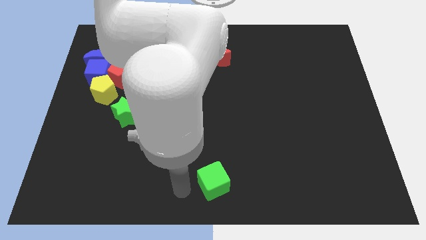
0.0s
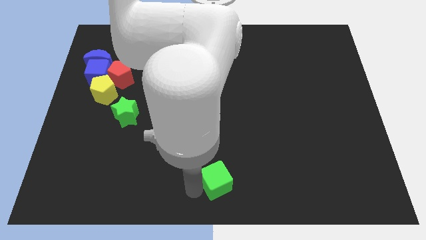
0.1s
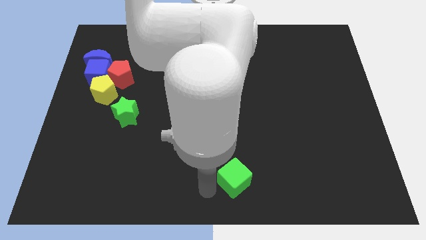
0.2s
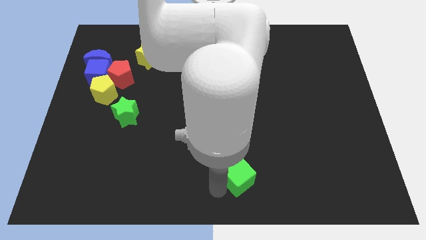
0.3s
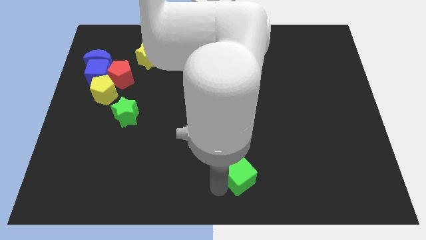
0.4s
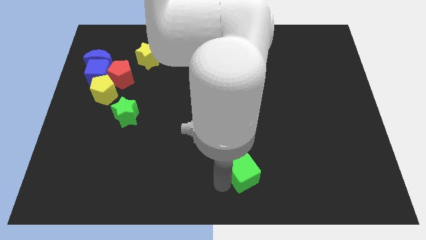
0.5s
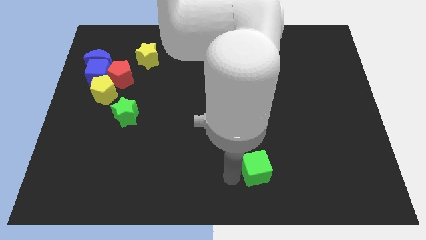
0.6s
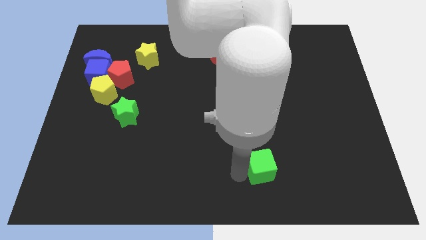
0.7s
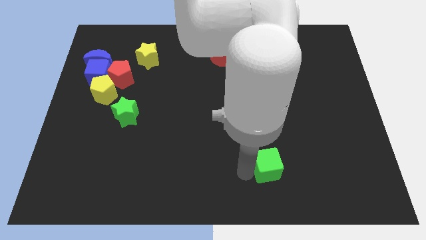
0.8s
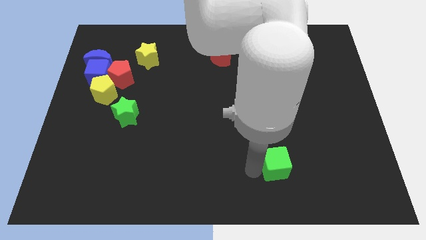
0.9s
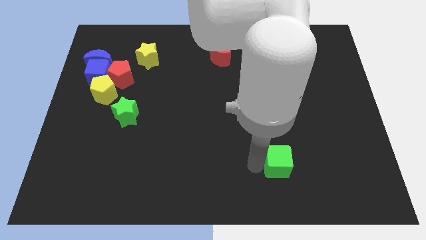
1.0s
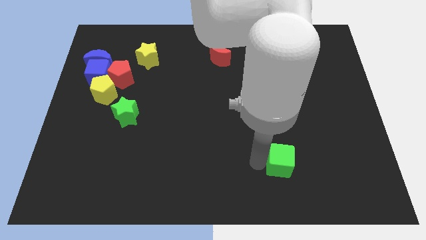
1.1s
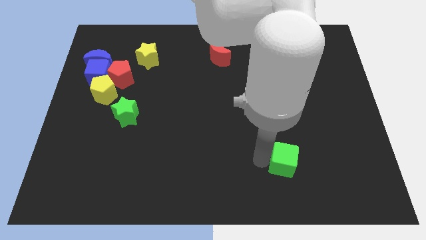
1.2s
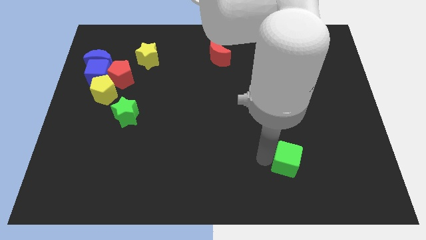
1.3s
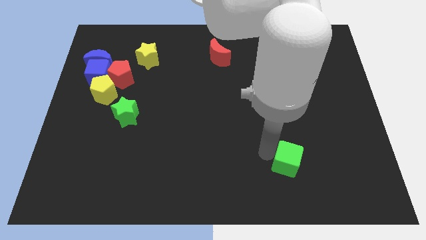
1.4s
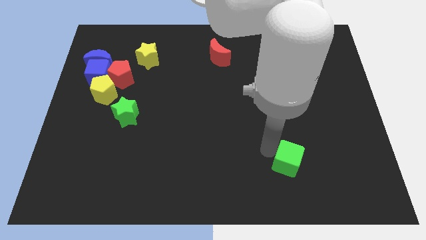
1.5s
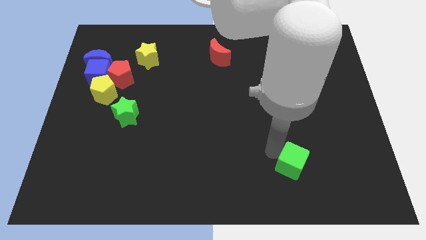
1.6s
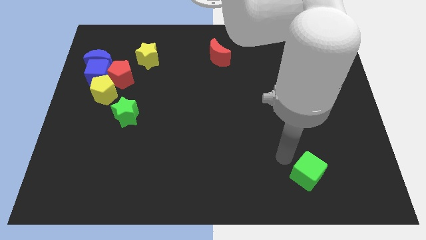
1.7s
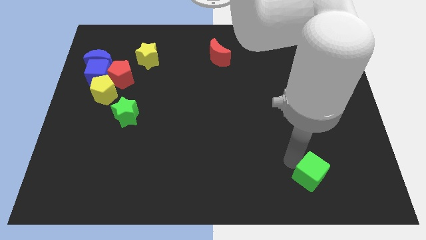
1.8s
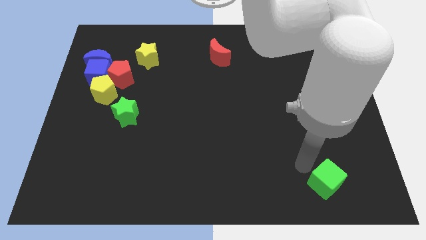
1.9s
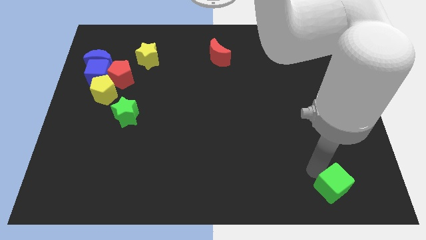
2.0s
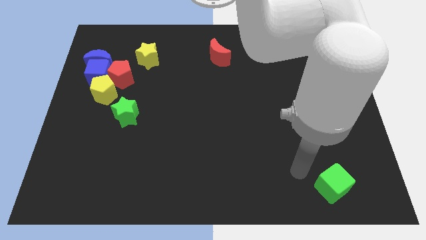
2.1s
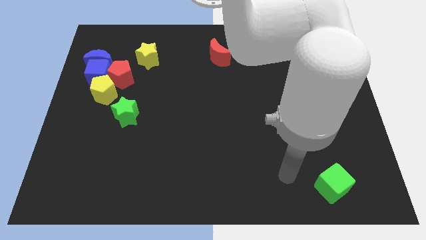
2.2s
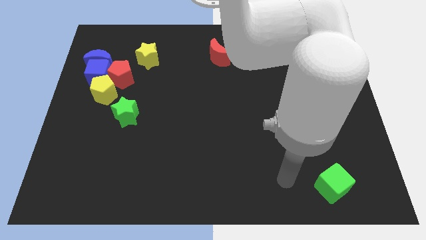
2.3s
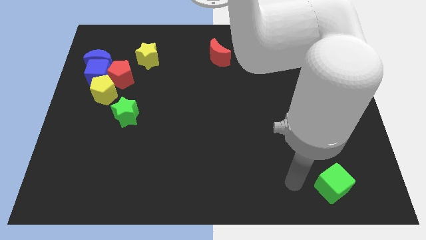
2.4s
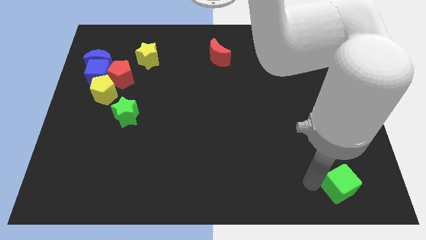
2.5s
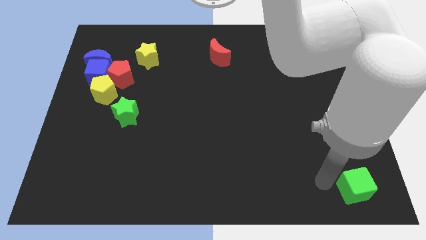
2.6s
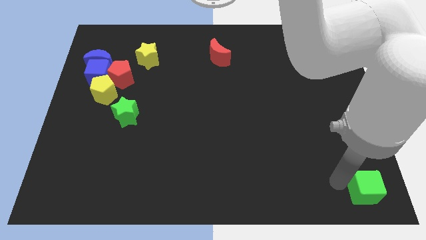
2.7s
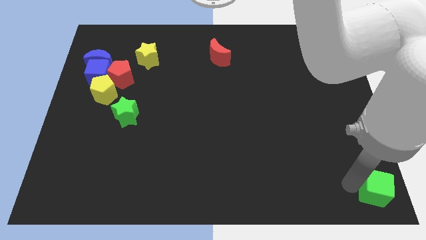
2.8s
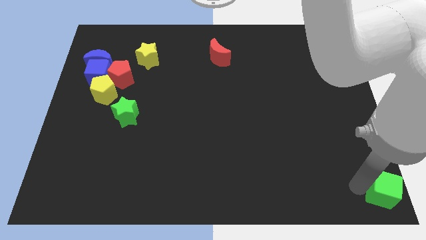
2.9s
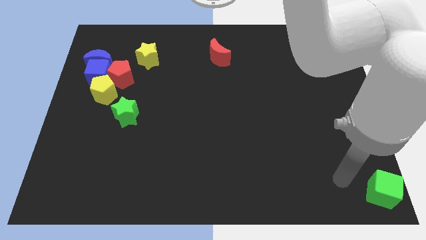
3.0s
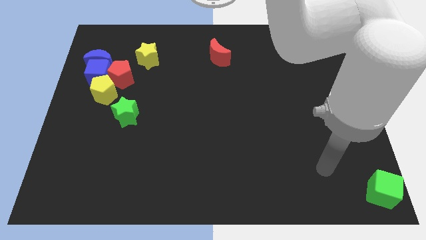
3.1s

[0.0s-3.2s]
place green cube towards bottom right corner

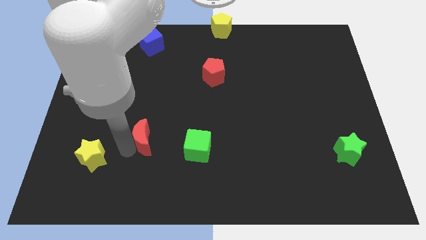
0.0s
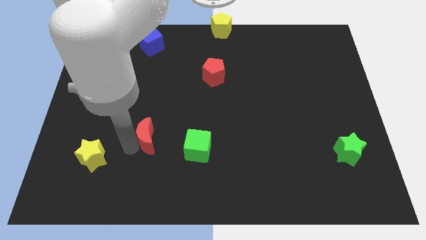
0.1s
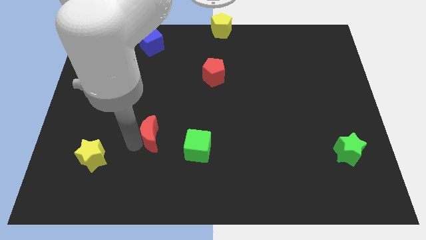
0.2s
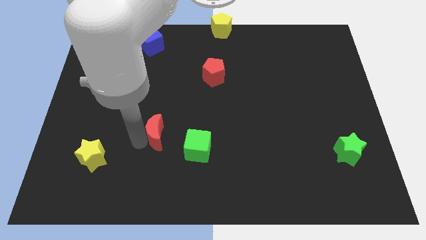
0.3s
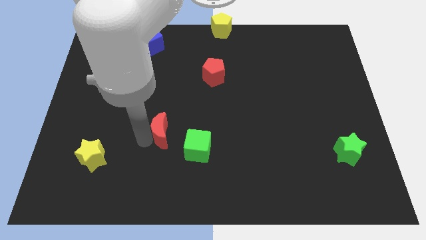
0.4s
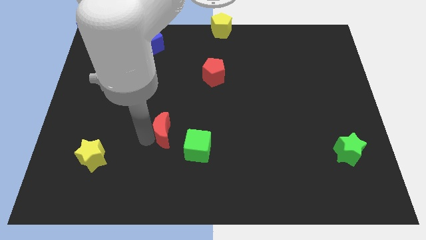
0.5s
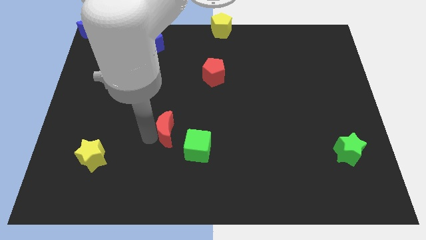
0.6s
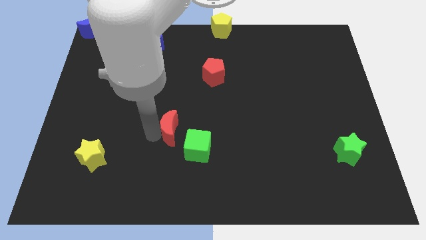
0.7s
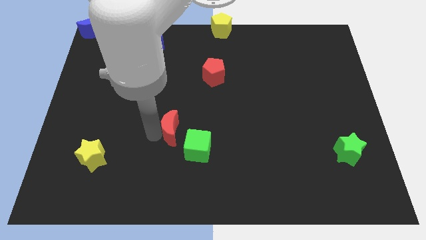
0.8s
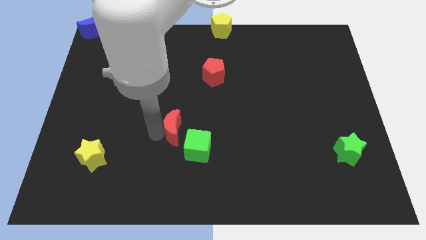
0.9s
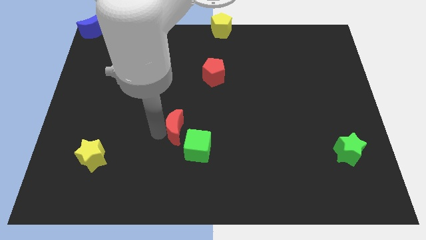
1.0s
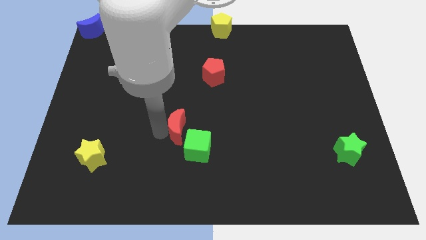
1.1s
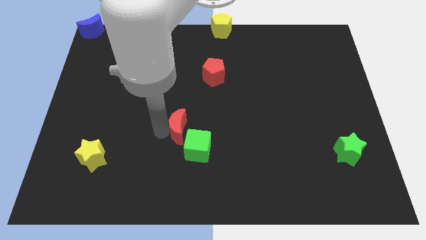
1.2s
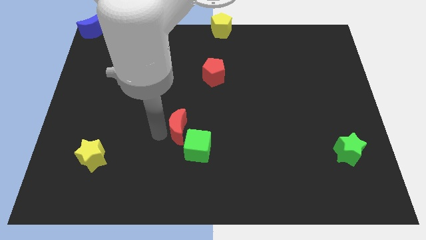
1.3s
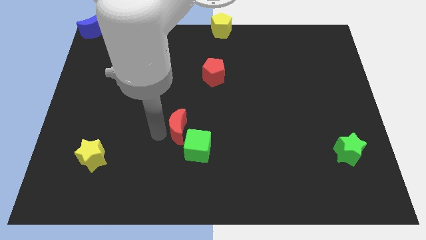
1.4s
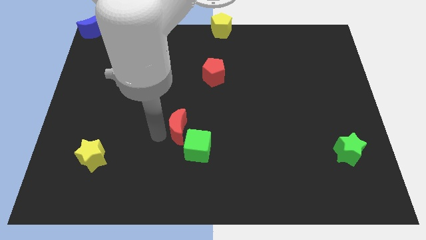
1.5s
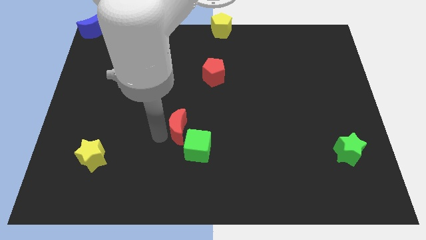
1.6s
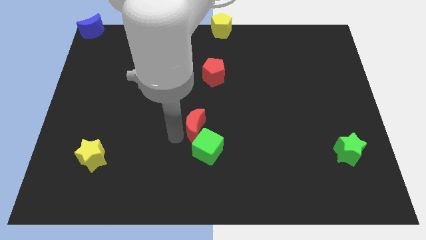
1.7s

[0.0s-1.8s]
push the red moon into the green cube

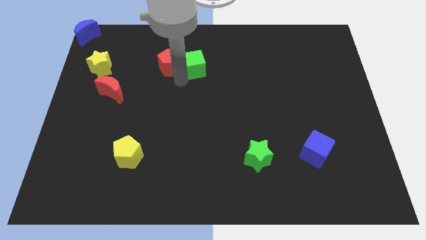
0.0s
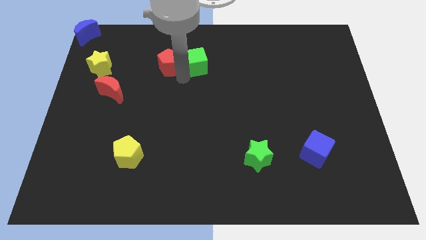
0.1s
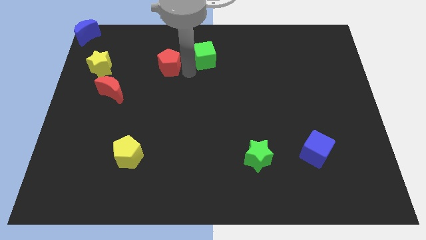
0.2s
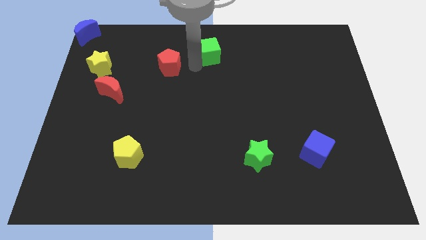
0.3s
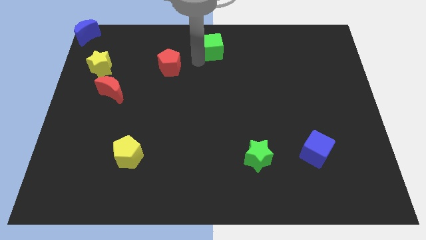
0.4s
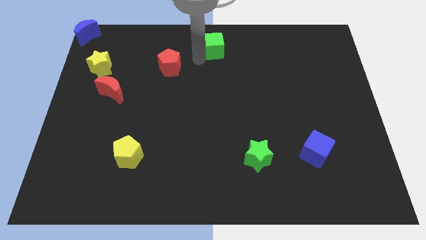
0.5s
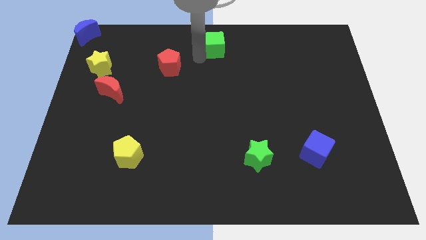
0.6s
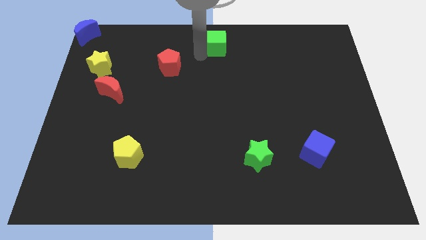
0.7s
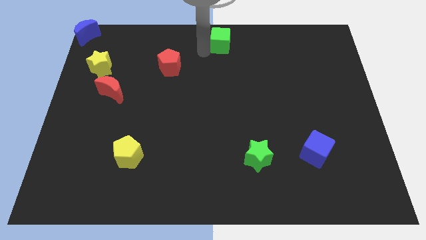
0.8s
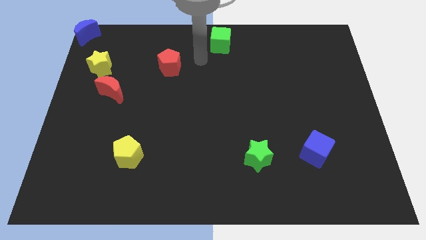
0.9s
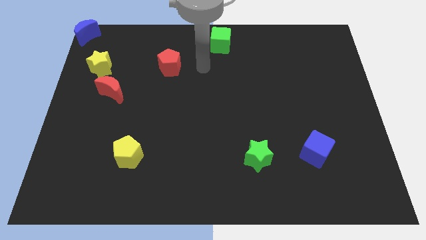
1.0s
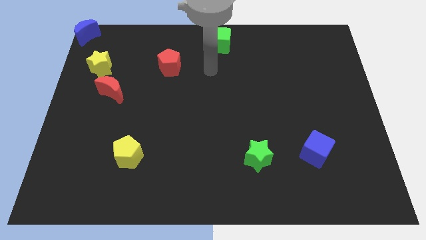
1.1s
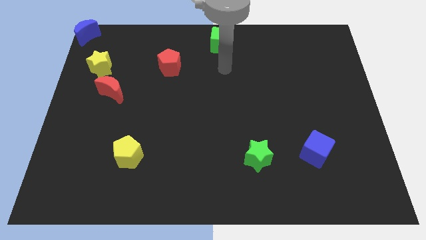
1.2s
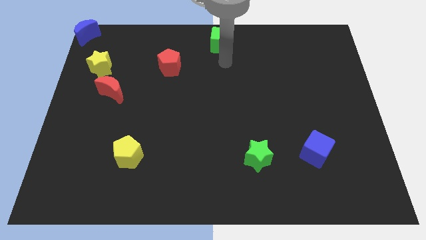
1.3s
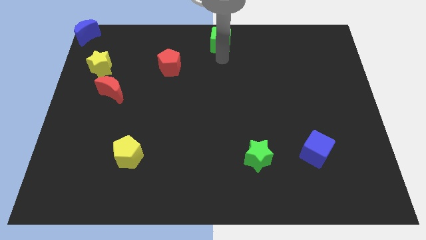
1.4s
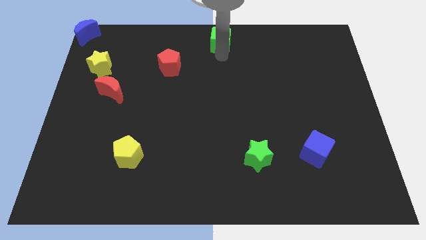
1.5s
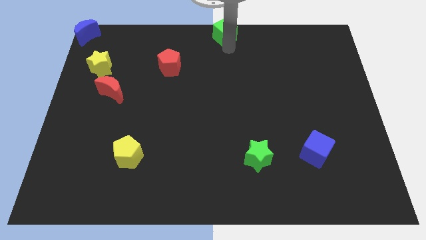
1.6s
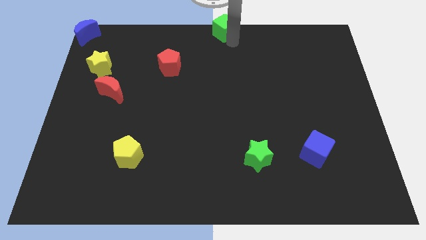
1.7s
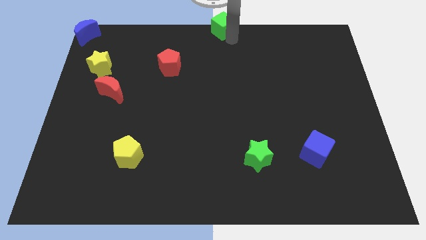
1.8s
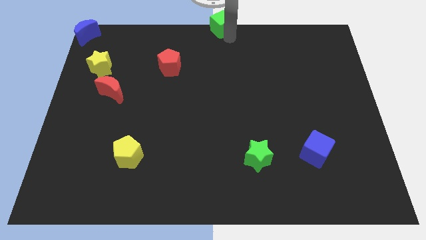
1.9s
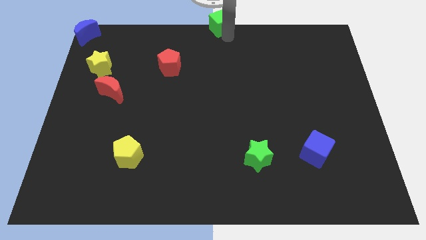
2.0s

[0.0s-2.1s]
slide the green cube to the top center of the table

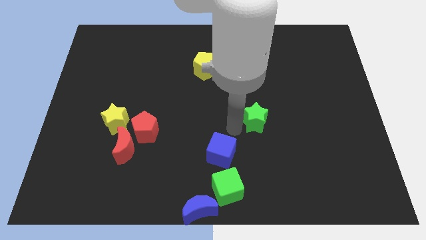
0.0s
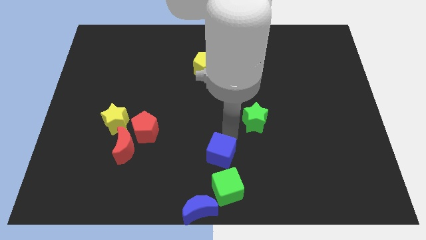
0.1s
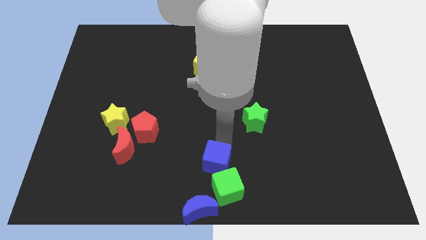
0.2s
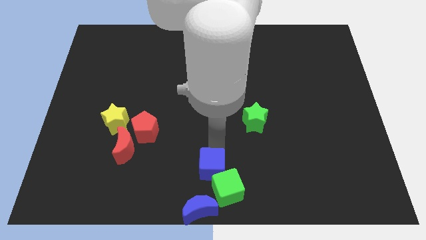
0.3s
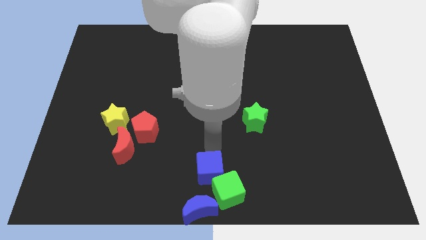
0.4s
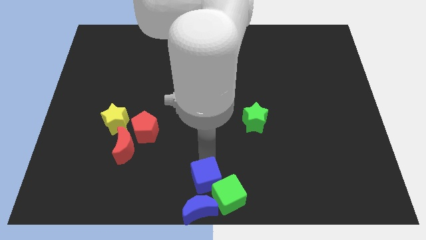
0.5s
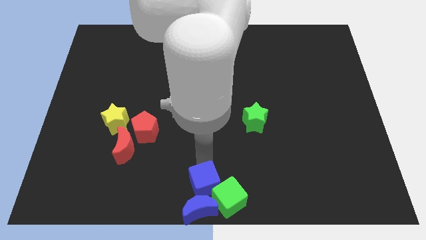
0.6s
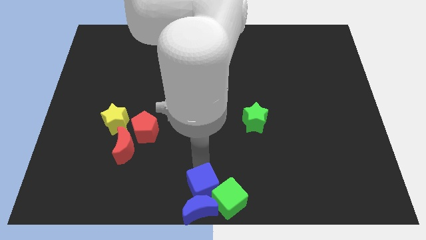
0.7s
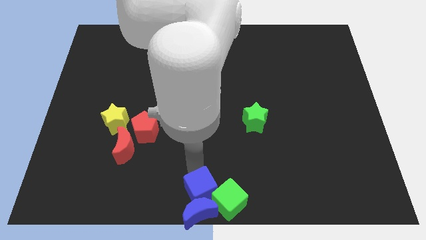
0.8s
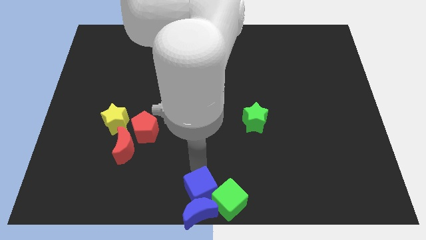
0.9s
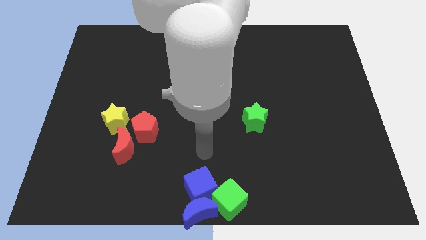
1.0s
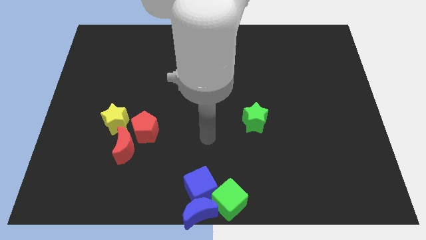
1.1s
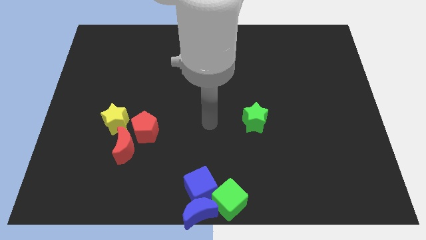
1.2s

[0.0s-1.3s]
push the blue cube to the top side of the blue moon

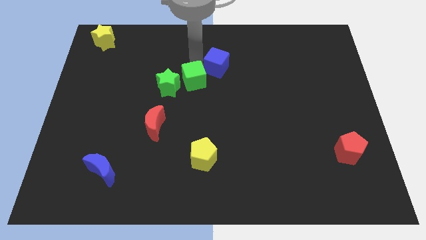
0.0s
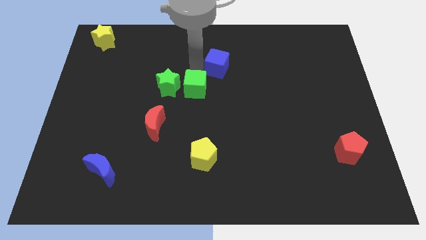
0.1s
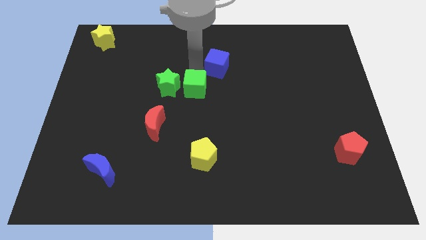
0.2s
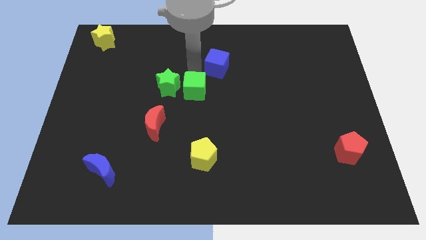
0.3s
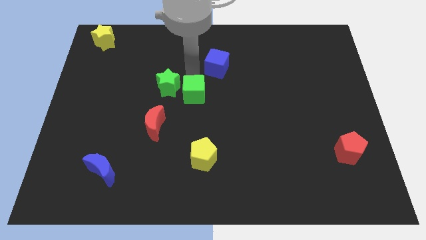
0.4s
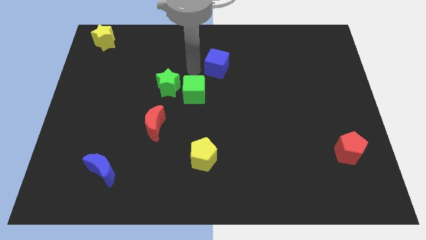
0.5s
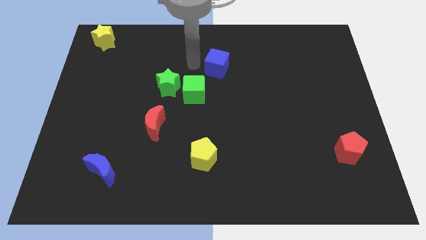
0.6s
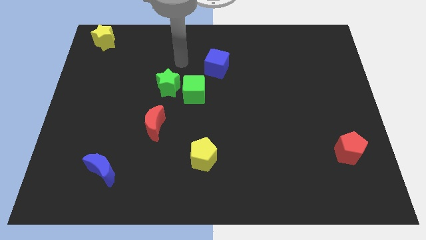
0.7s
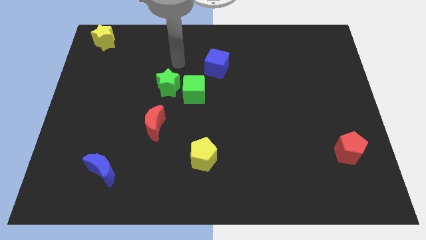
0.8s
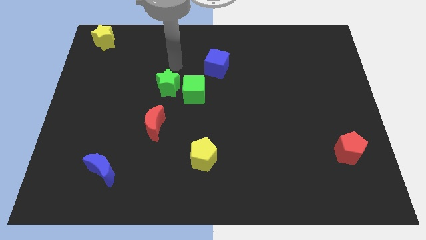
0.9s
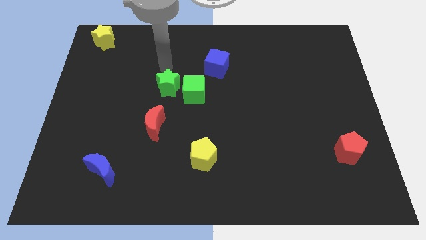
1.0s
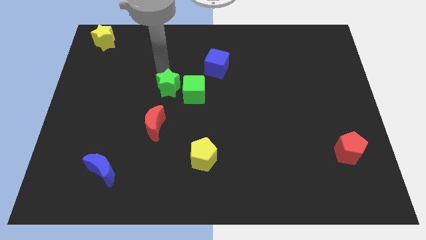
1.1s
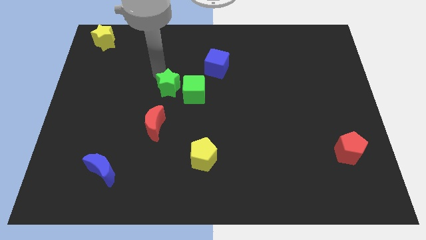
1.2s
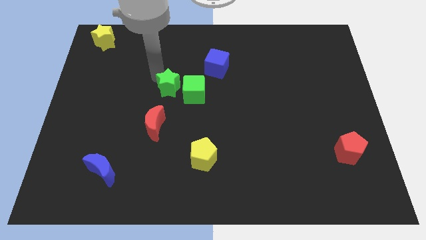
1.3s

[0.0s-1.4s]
push green cube to the center of the board
